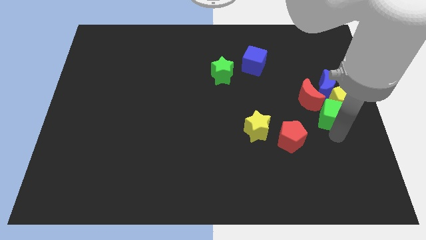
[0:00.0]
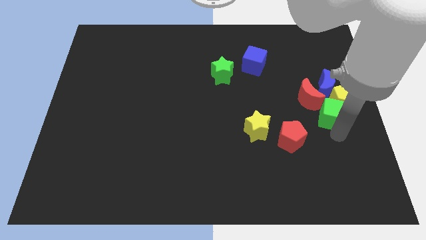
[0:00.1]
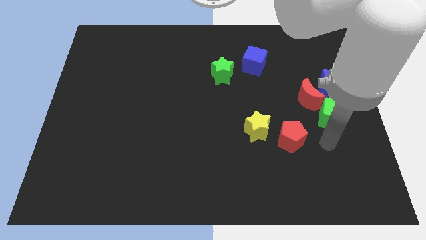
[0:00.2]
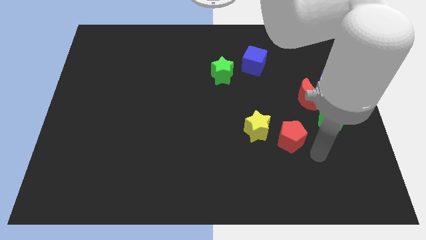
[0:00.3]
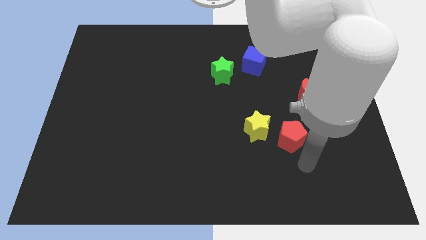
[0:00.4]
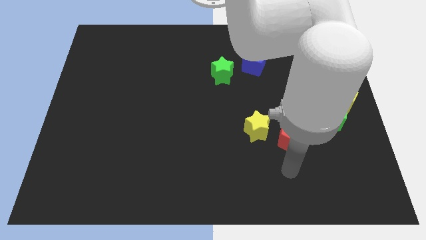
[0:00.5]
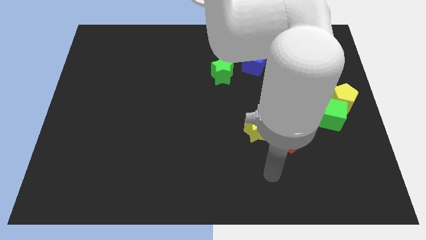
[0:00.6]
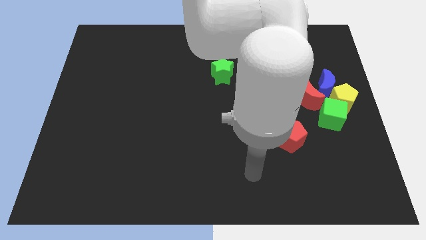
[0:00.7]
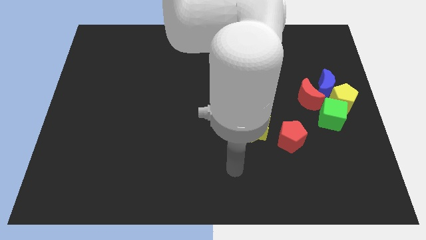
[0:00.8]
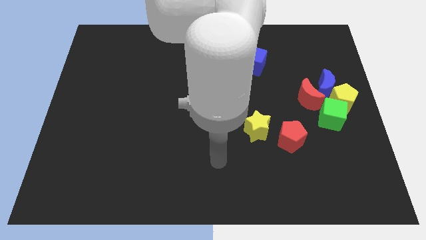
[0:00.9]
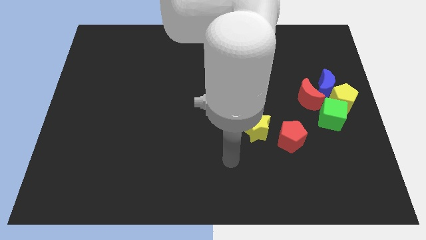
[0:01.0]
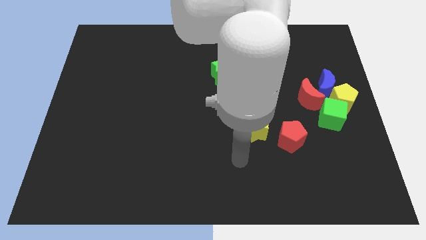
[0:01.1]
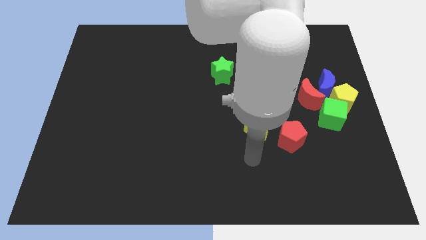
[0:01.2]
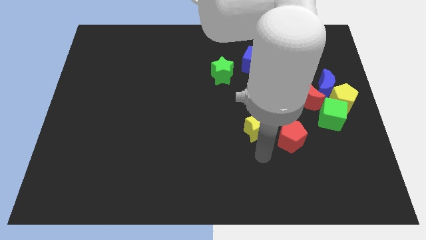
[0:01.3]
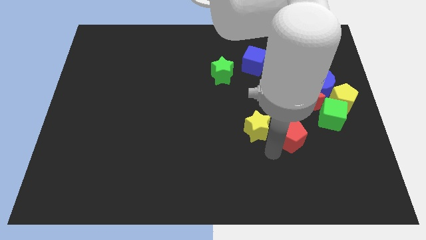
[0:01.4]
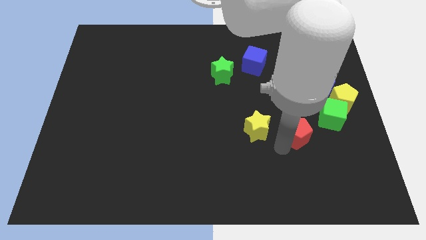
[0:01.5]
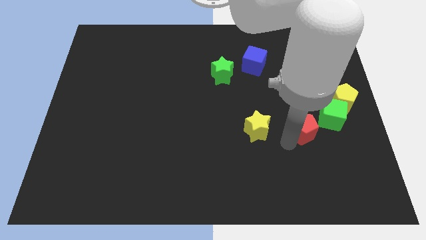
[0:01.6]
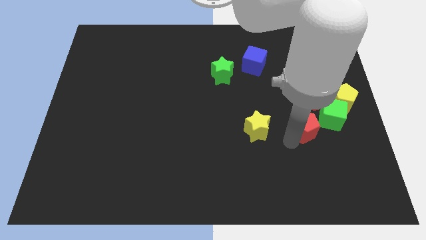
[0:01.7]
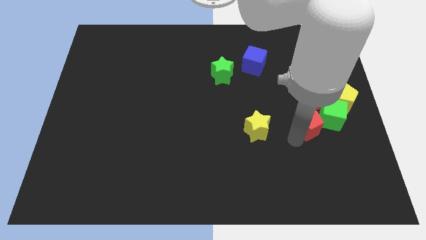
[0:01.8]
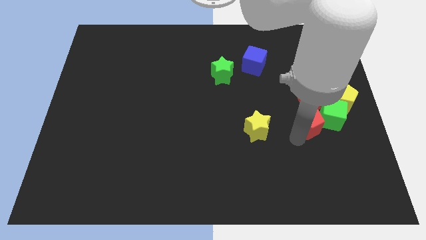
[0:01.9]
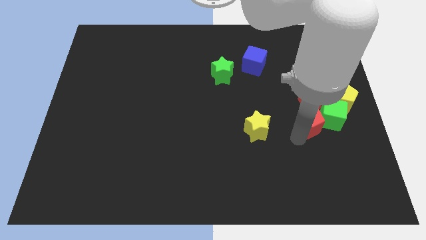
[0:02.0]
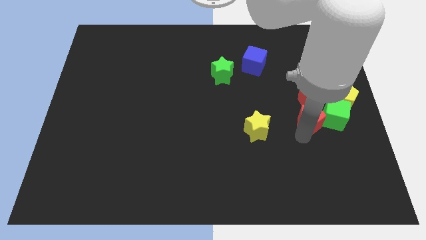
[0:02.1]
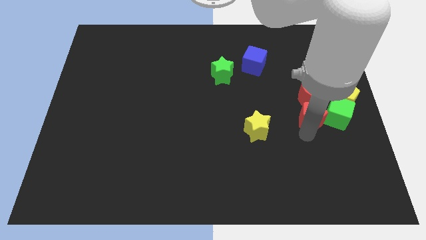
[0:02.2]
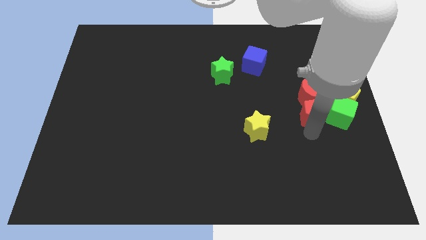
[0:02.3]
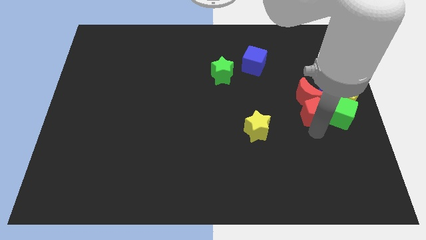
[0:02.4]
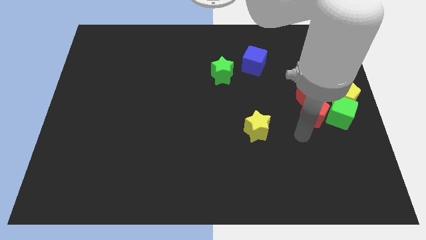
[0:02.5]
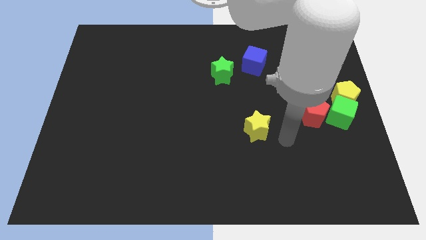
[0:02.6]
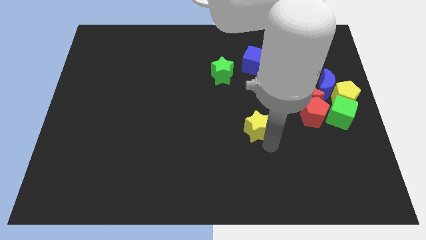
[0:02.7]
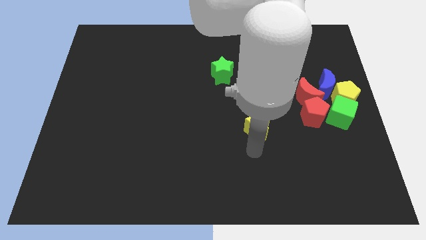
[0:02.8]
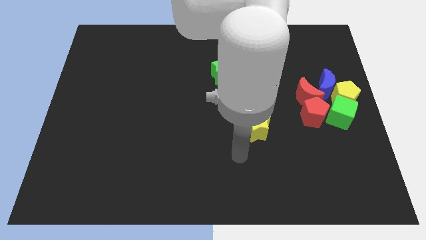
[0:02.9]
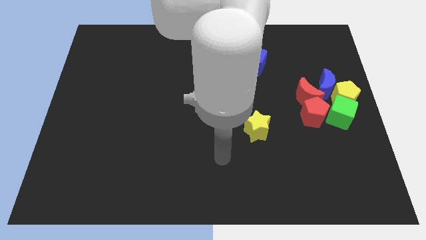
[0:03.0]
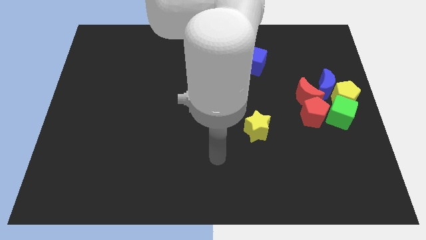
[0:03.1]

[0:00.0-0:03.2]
push the red pentagon into the red crescent

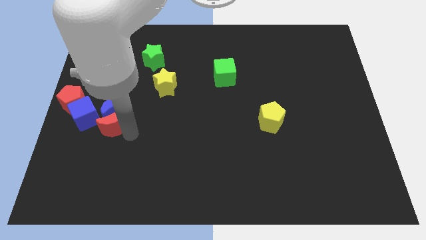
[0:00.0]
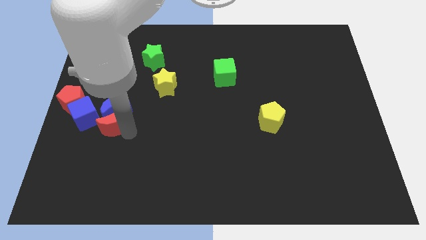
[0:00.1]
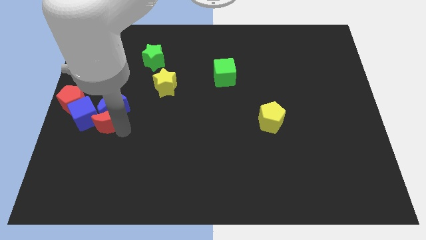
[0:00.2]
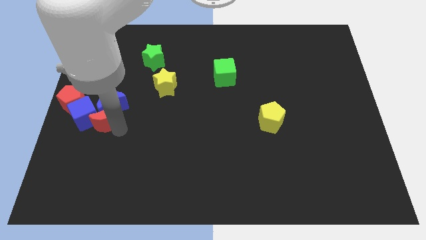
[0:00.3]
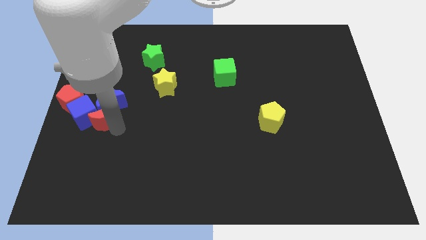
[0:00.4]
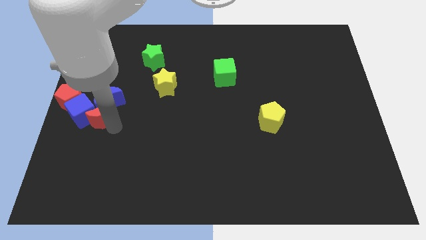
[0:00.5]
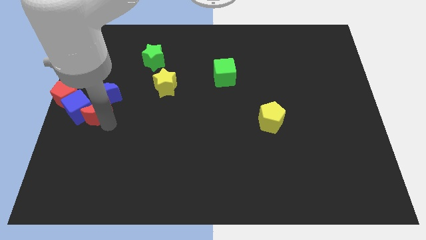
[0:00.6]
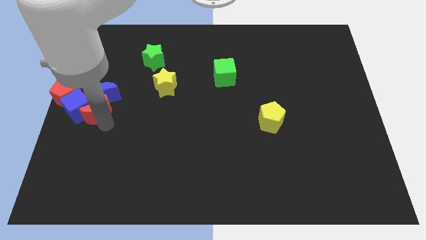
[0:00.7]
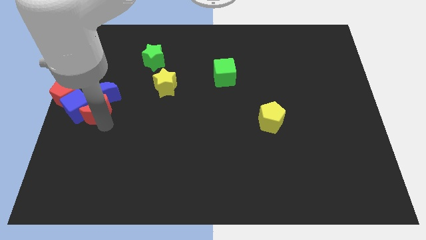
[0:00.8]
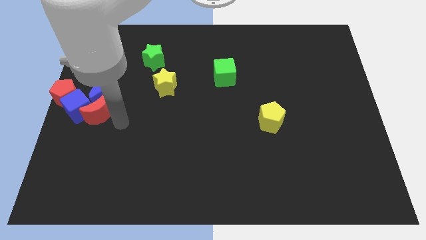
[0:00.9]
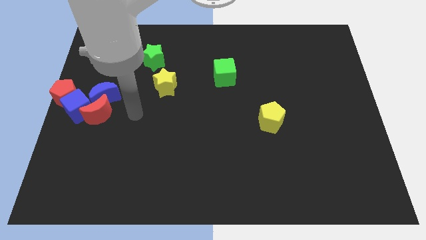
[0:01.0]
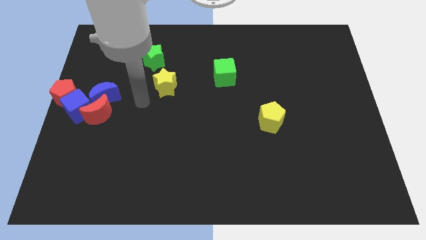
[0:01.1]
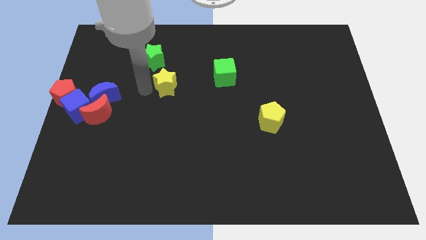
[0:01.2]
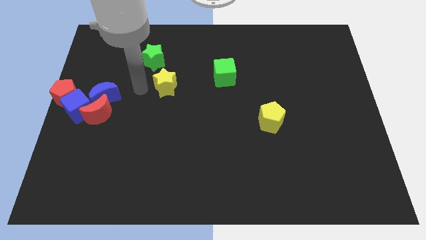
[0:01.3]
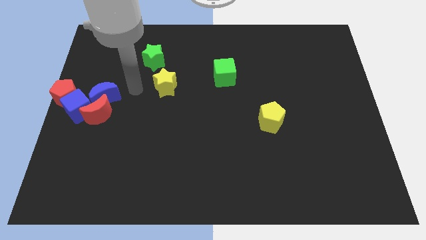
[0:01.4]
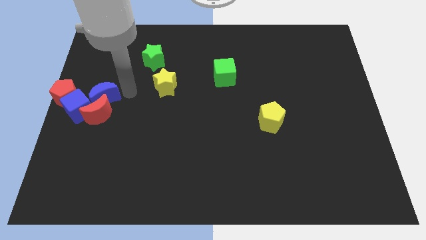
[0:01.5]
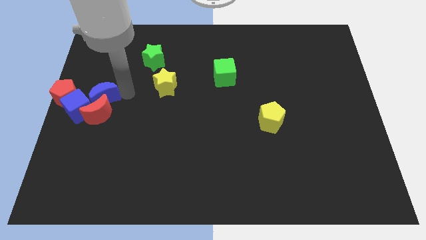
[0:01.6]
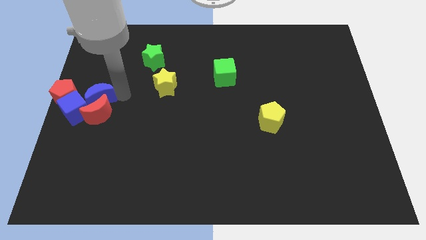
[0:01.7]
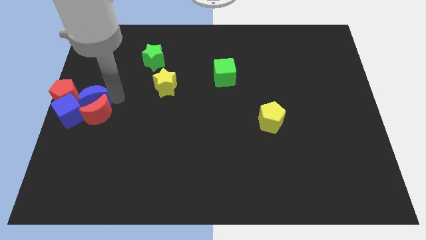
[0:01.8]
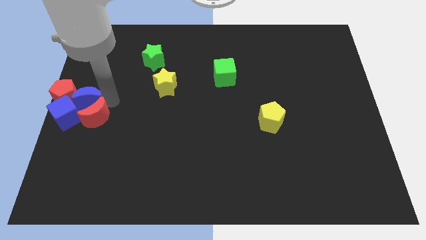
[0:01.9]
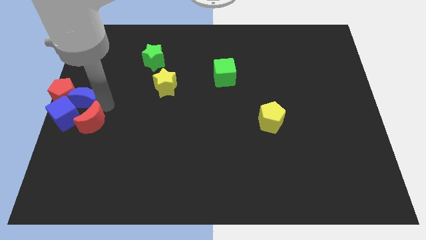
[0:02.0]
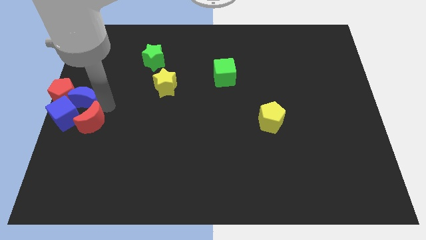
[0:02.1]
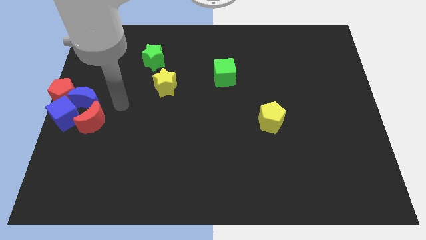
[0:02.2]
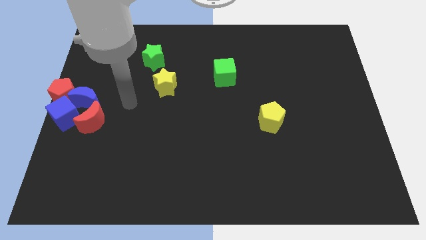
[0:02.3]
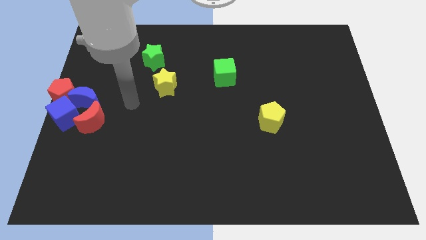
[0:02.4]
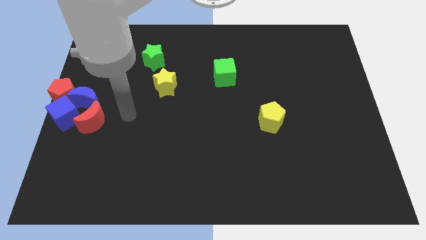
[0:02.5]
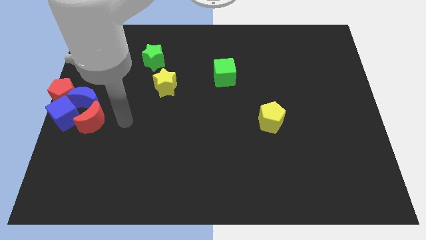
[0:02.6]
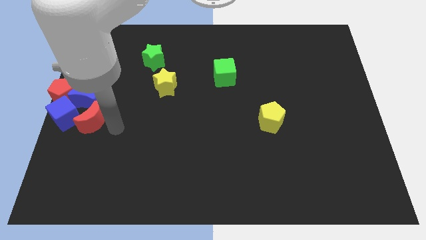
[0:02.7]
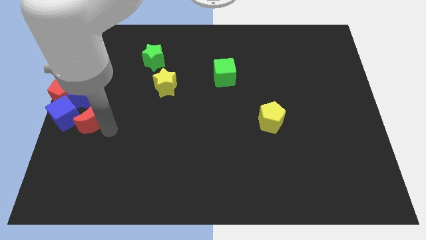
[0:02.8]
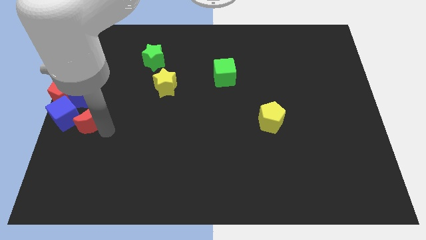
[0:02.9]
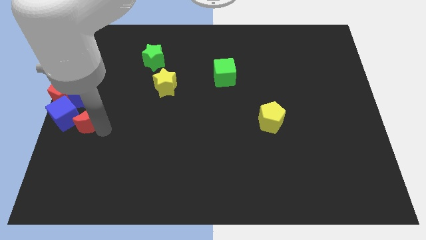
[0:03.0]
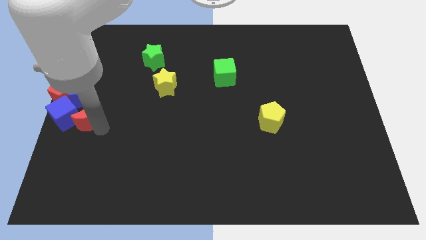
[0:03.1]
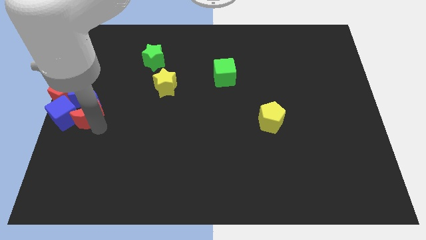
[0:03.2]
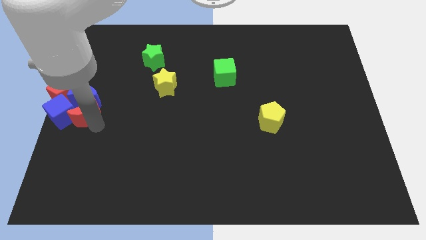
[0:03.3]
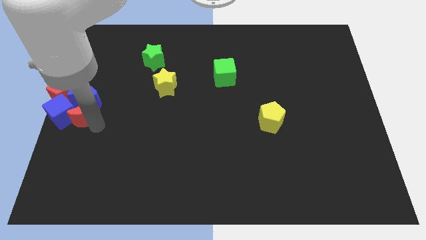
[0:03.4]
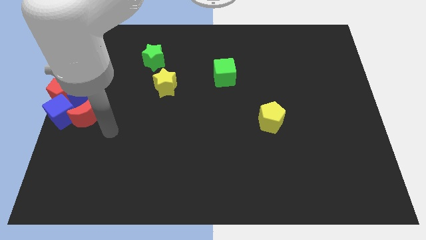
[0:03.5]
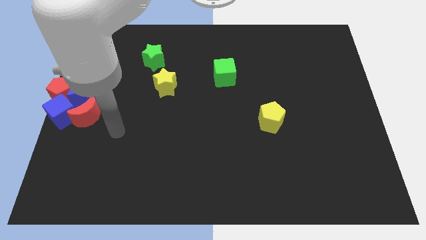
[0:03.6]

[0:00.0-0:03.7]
push the blue and red crescents into the blue cube

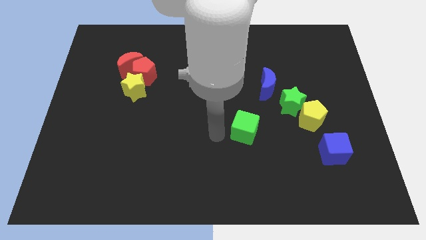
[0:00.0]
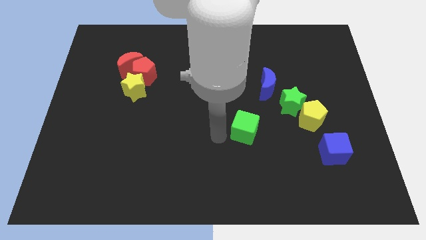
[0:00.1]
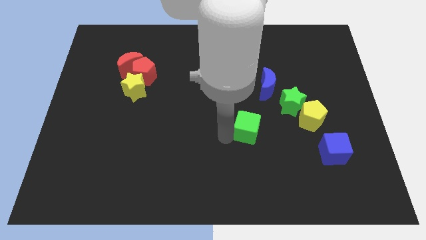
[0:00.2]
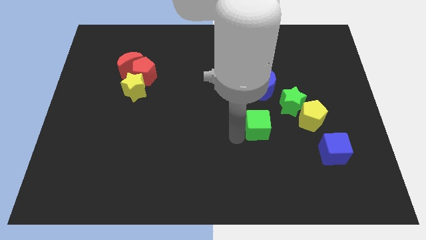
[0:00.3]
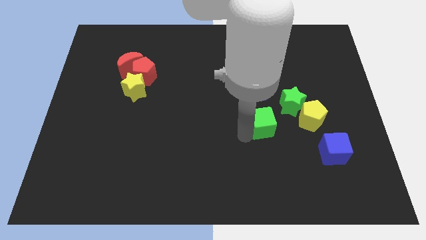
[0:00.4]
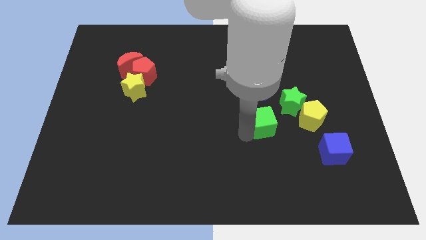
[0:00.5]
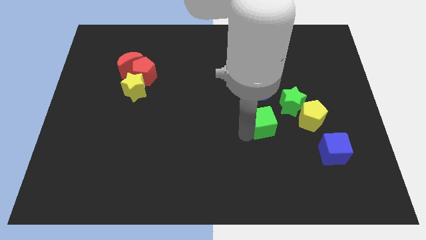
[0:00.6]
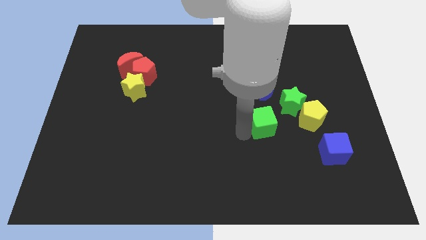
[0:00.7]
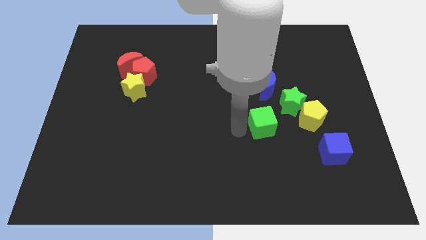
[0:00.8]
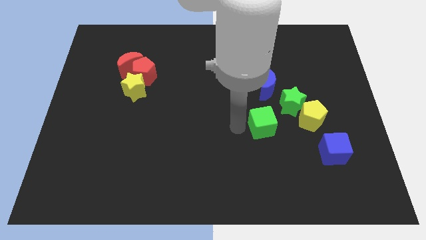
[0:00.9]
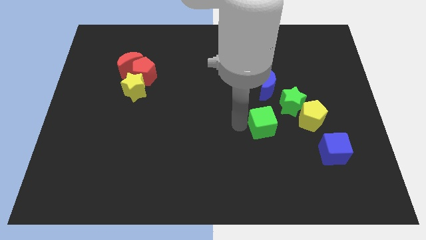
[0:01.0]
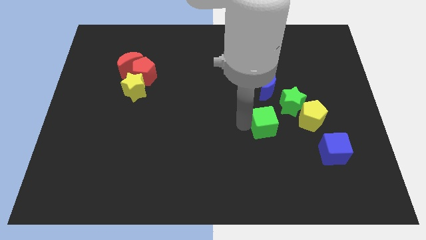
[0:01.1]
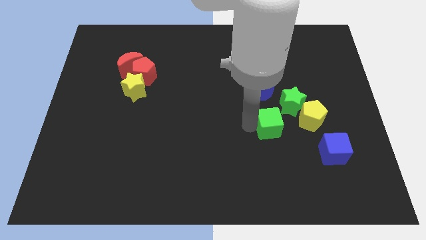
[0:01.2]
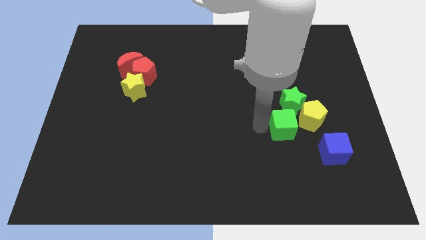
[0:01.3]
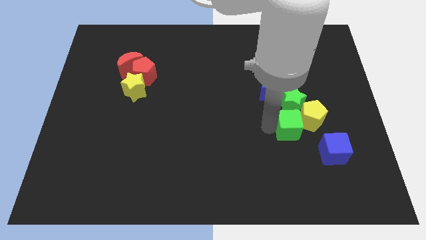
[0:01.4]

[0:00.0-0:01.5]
push the green cube to the left of the yellow pentagon

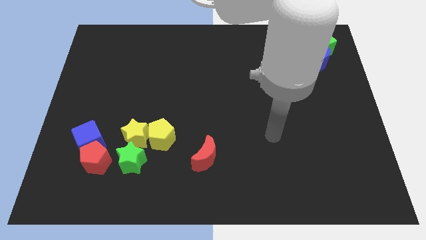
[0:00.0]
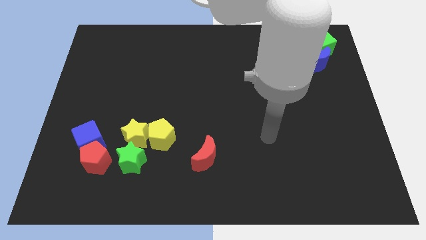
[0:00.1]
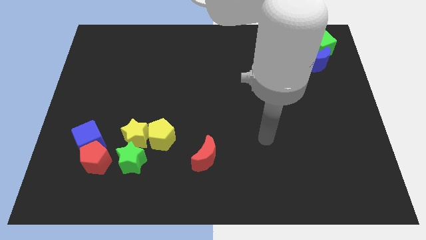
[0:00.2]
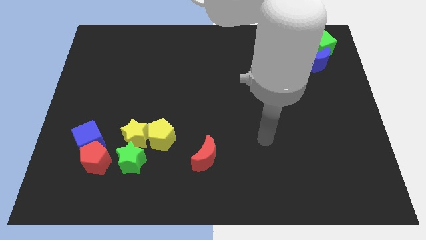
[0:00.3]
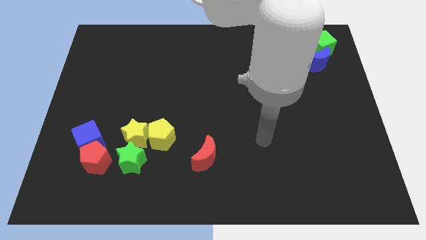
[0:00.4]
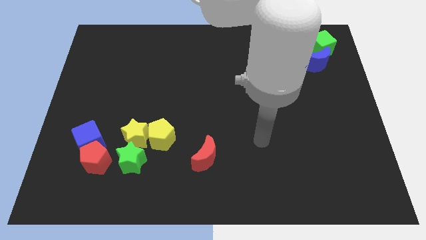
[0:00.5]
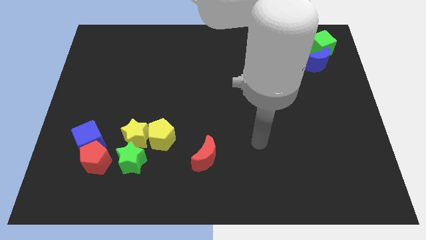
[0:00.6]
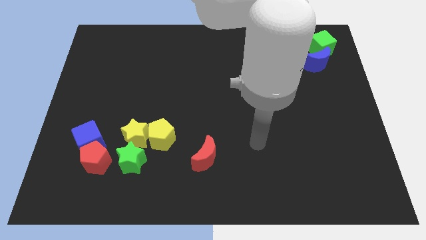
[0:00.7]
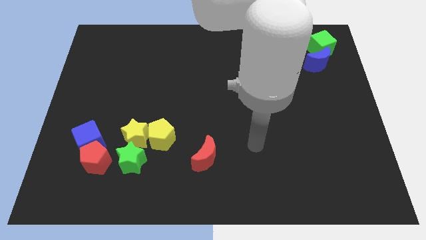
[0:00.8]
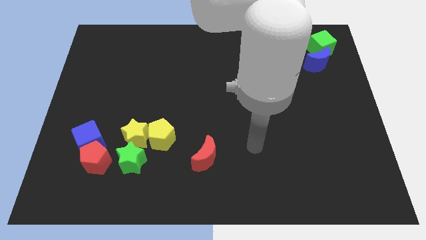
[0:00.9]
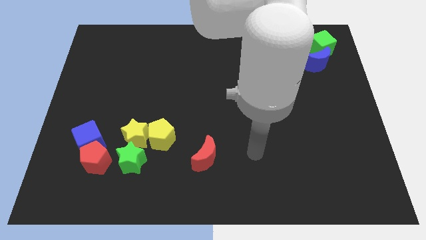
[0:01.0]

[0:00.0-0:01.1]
move the arm towards the red crescent
